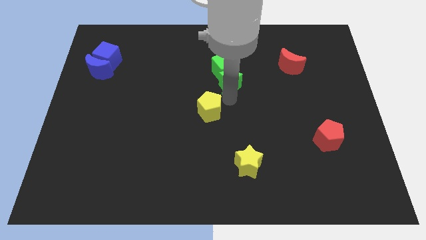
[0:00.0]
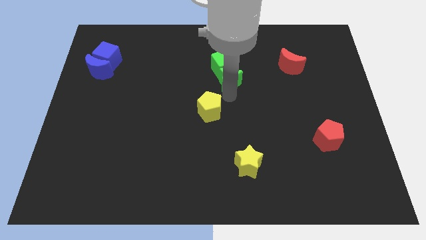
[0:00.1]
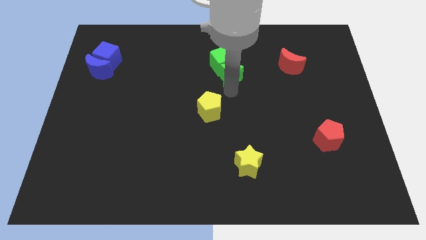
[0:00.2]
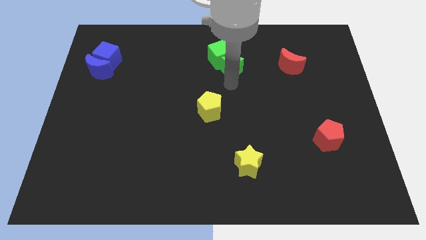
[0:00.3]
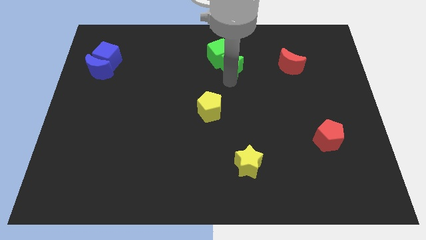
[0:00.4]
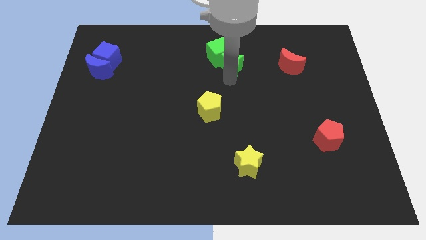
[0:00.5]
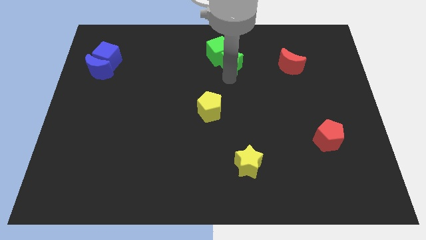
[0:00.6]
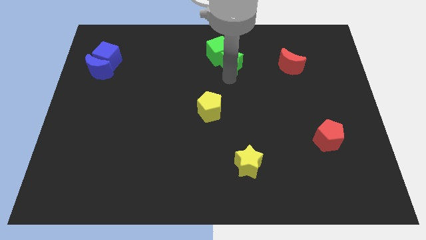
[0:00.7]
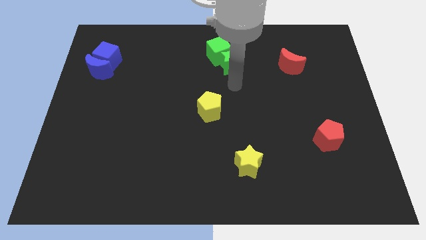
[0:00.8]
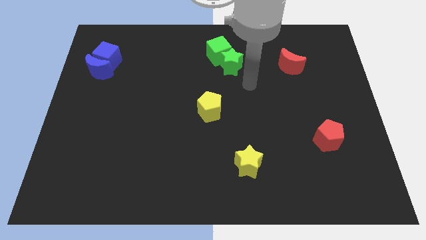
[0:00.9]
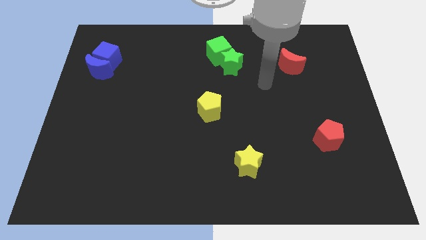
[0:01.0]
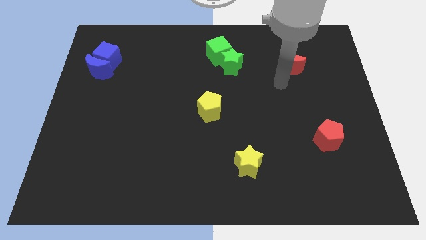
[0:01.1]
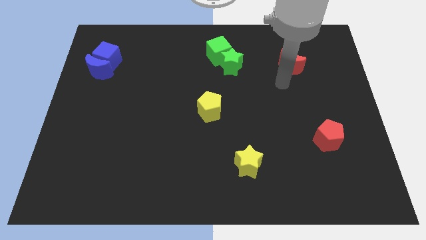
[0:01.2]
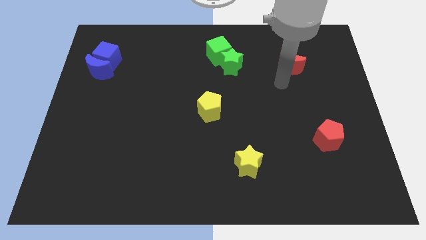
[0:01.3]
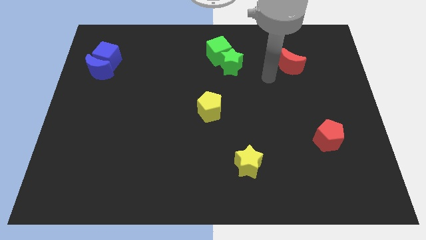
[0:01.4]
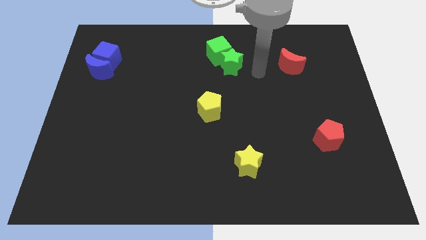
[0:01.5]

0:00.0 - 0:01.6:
push the green cube with the green star towards the top center of the board

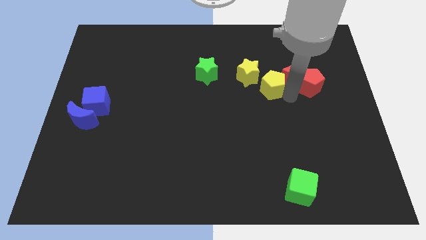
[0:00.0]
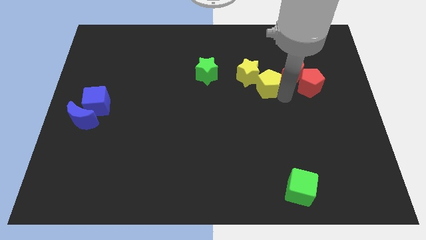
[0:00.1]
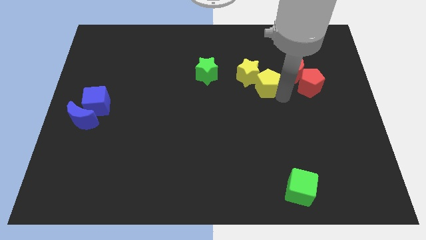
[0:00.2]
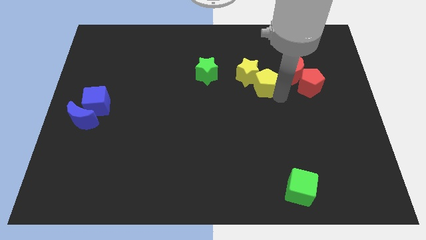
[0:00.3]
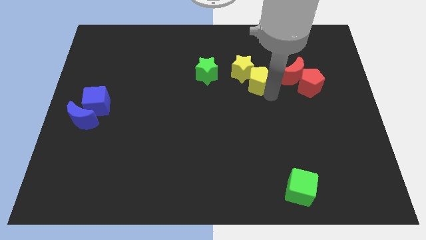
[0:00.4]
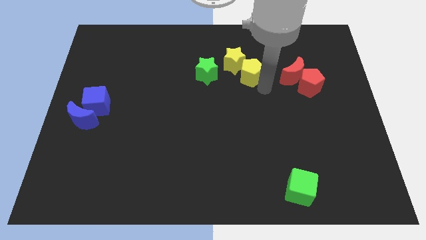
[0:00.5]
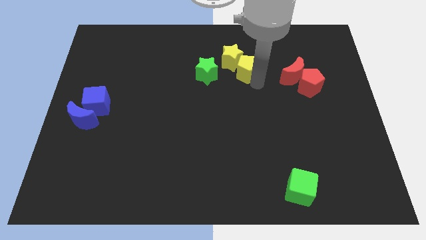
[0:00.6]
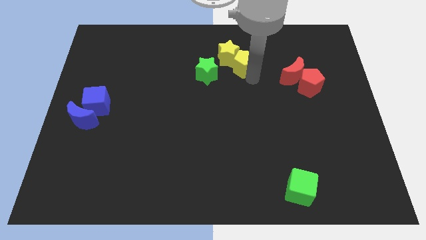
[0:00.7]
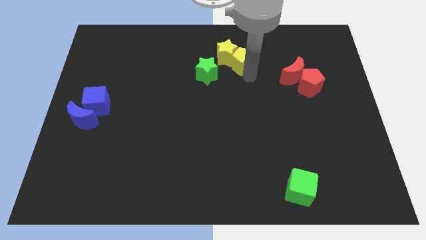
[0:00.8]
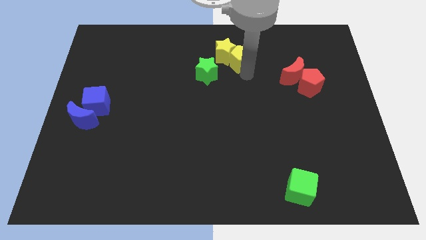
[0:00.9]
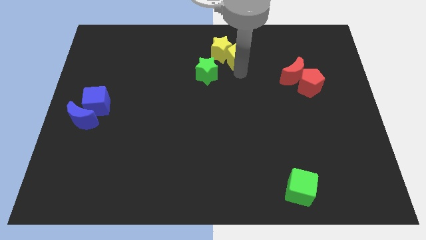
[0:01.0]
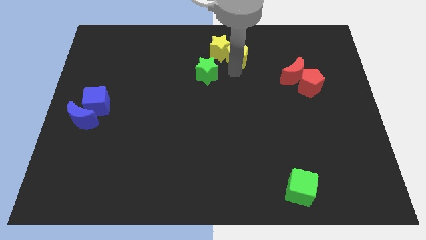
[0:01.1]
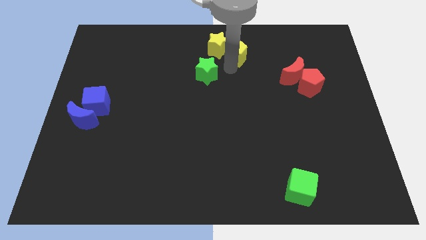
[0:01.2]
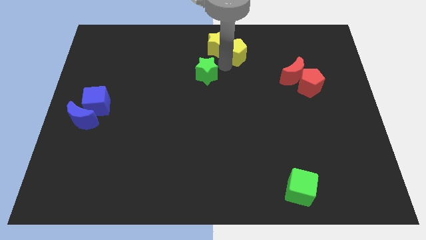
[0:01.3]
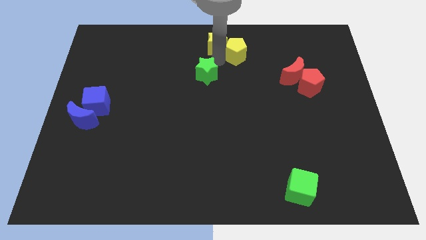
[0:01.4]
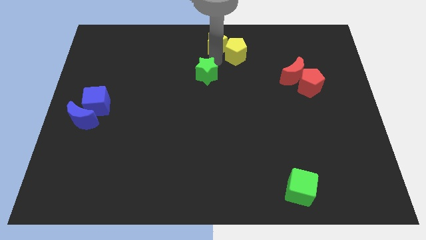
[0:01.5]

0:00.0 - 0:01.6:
push the yellow star and yellow pentagon towards the top center of the board

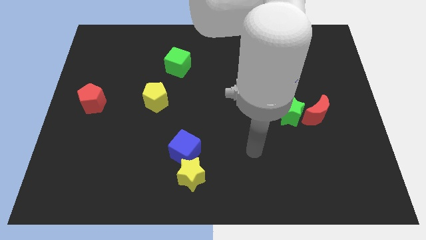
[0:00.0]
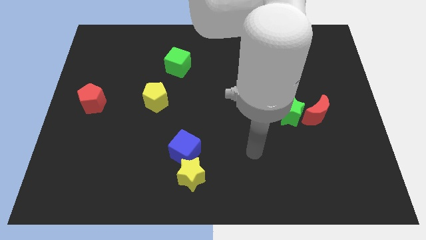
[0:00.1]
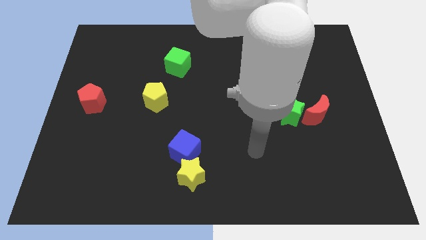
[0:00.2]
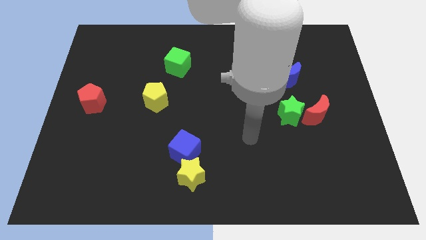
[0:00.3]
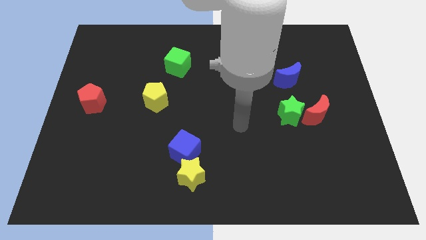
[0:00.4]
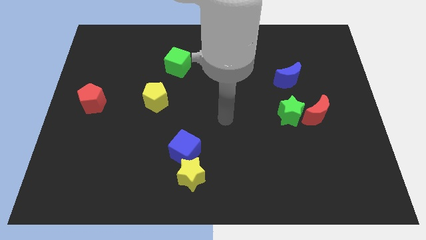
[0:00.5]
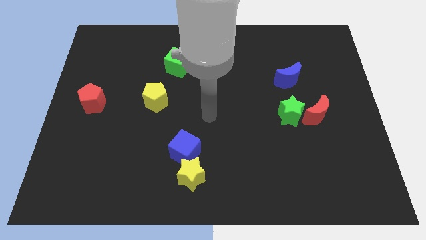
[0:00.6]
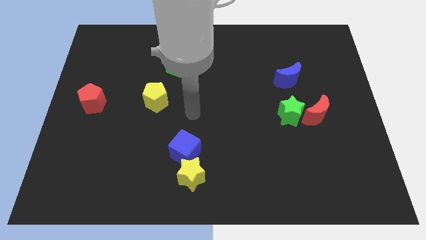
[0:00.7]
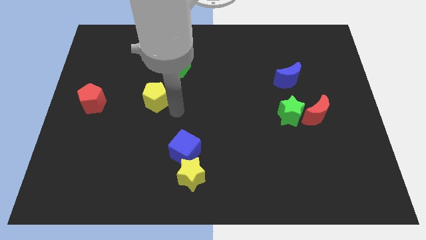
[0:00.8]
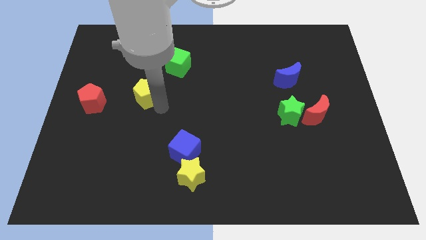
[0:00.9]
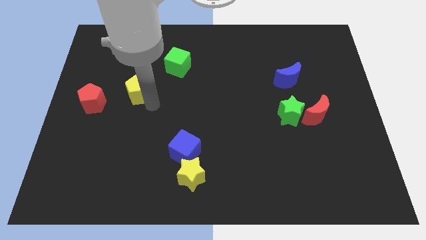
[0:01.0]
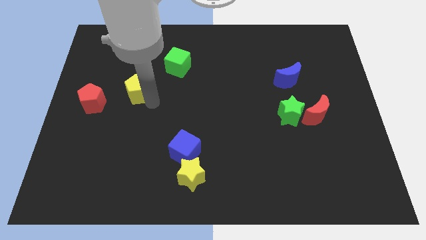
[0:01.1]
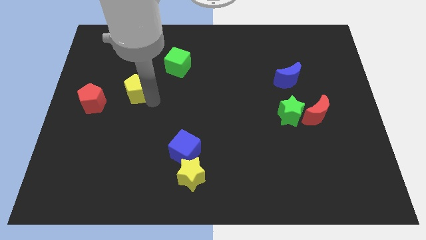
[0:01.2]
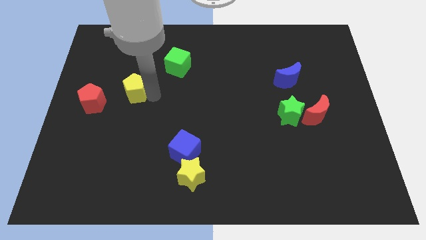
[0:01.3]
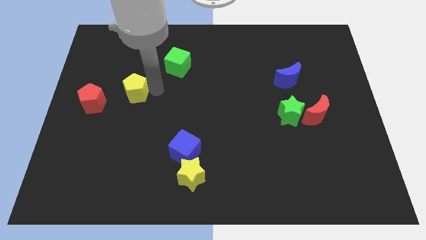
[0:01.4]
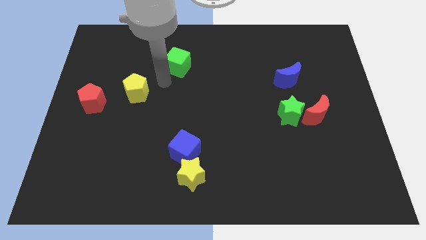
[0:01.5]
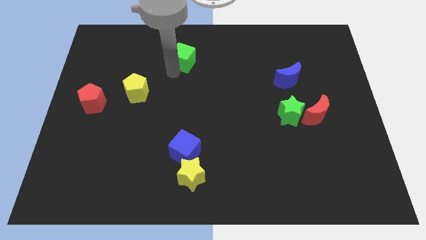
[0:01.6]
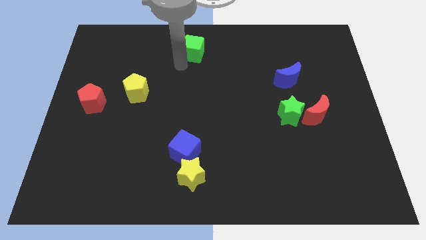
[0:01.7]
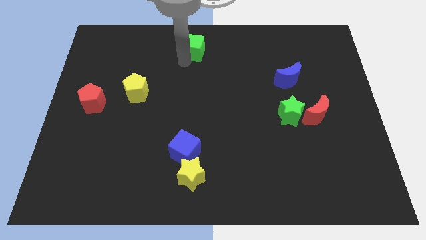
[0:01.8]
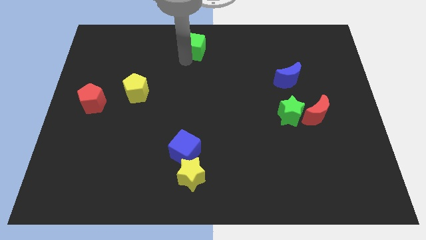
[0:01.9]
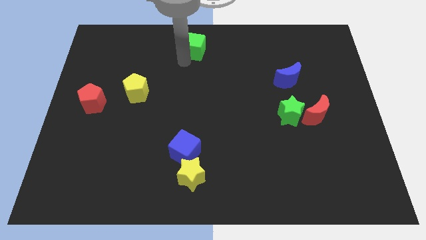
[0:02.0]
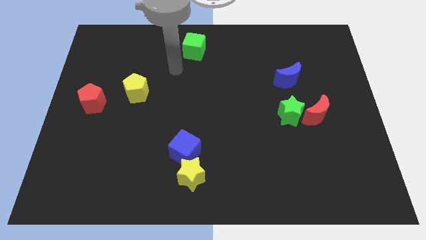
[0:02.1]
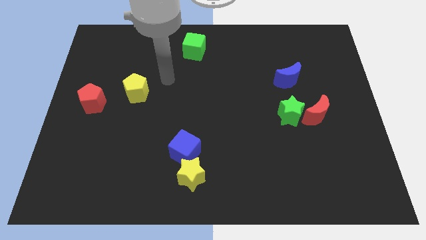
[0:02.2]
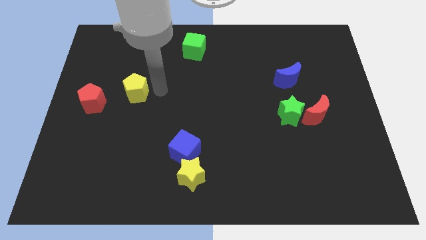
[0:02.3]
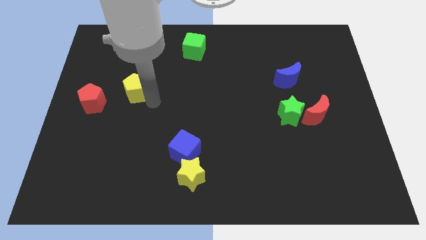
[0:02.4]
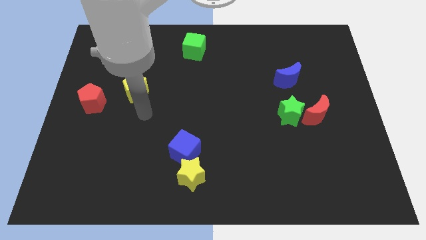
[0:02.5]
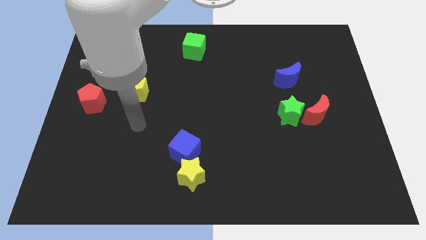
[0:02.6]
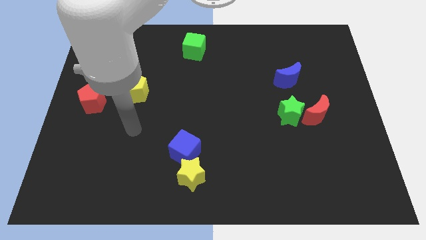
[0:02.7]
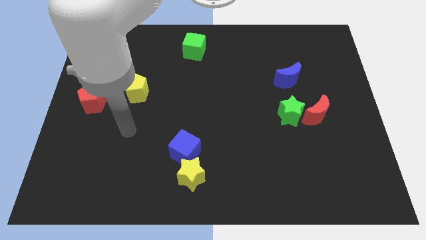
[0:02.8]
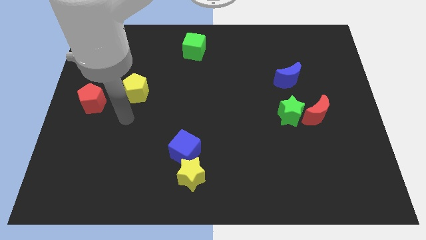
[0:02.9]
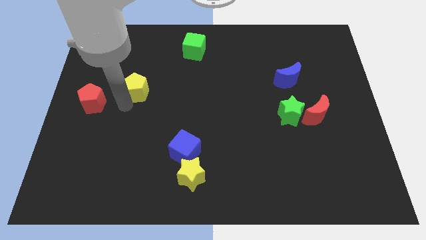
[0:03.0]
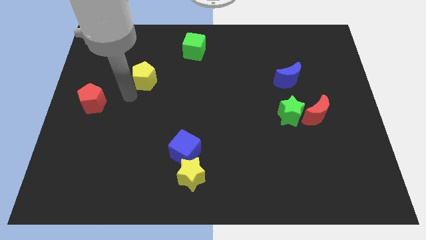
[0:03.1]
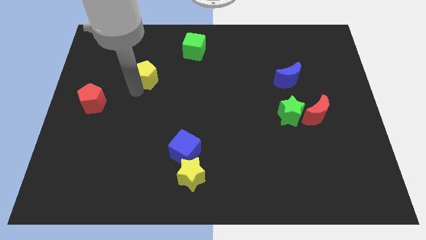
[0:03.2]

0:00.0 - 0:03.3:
place the yellow pentagon in between the red pentagon and green cube

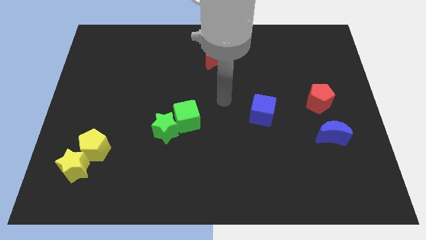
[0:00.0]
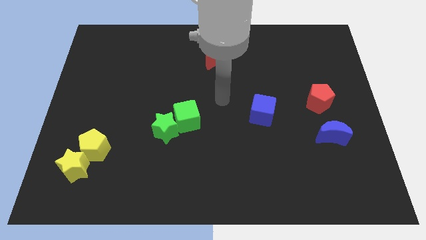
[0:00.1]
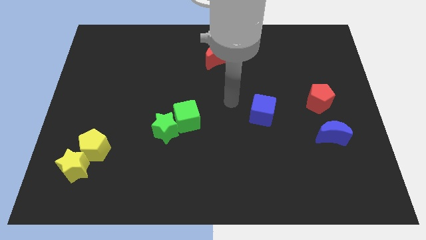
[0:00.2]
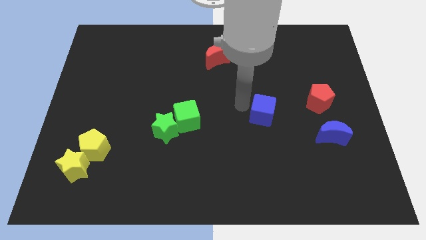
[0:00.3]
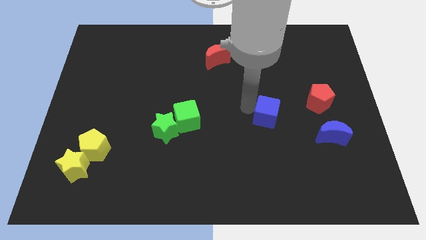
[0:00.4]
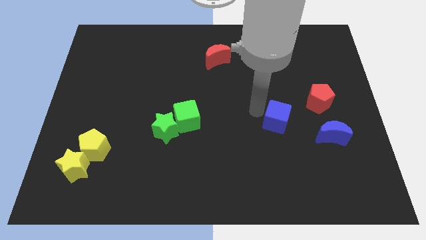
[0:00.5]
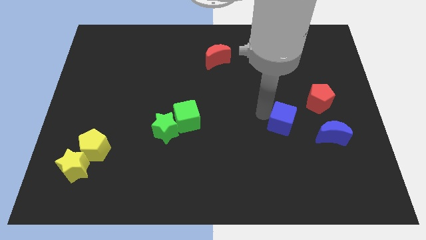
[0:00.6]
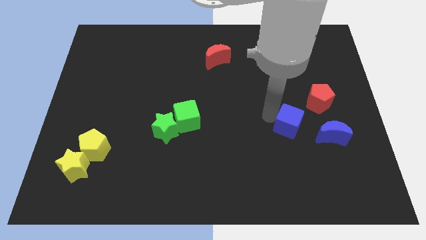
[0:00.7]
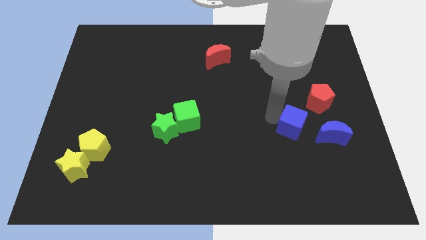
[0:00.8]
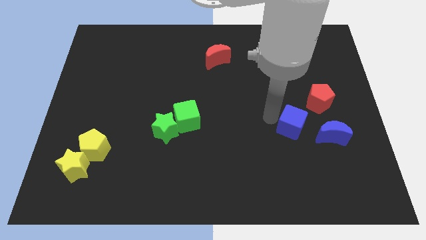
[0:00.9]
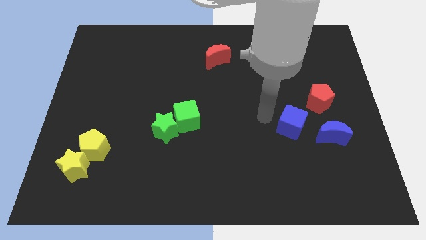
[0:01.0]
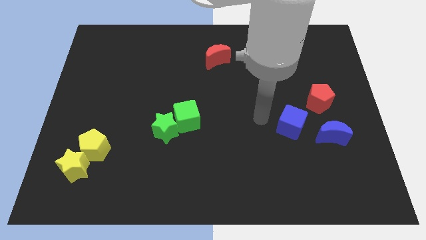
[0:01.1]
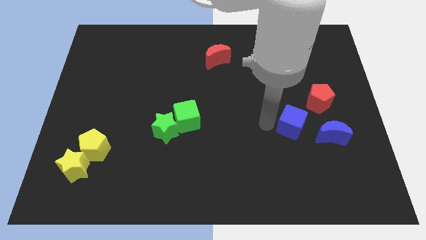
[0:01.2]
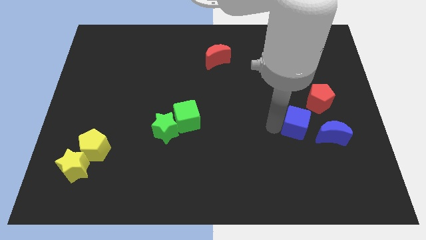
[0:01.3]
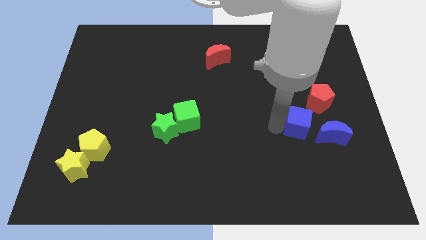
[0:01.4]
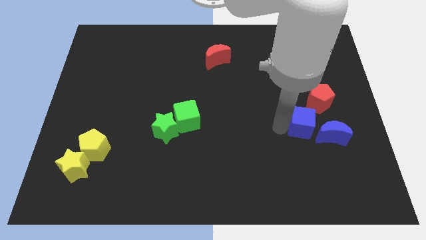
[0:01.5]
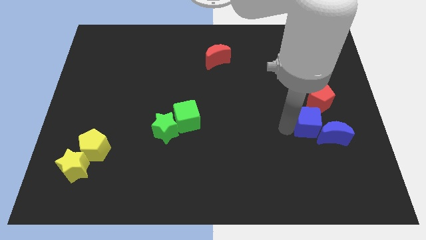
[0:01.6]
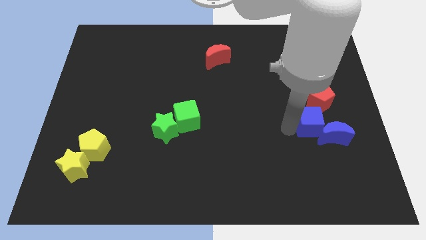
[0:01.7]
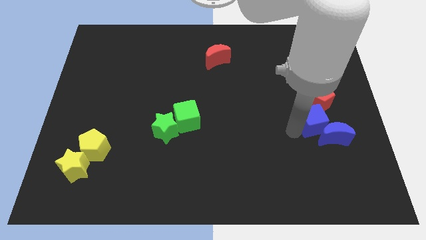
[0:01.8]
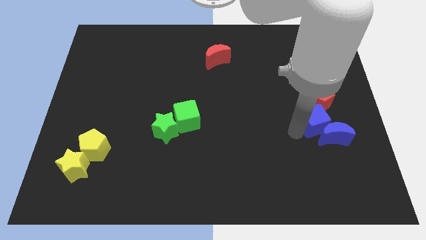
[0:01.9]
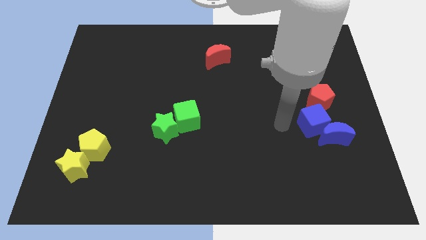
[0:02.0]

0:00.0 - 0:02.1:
push blue cube into blue moon

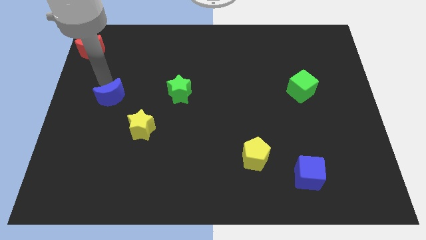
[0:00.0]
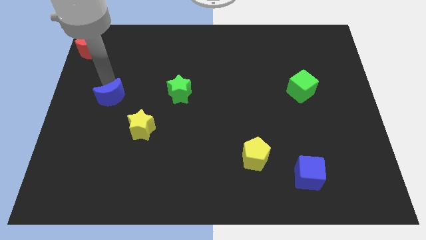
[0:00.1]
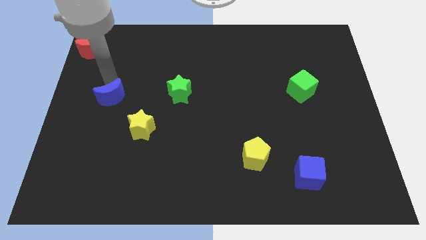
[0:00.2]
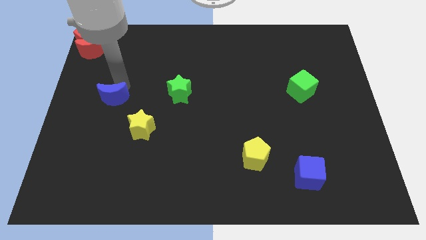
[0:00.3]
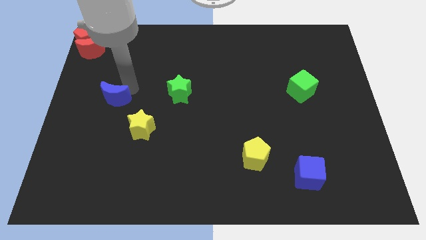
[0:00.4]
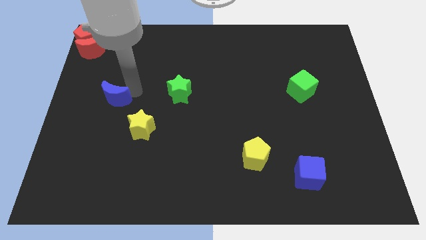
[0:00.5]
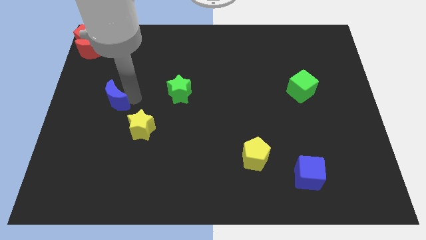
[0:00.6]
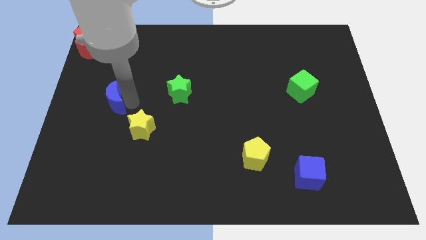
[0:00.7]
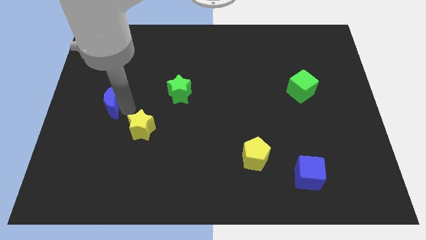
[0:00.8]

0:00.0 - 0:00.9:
slightly push blue crescent downwards of the board
